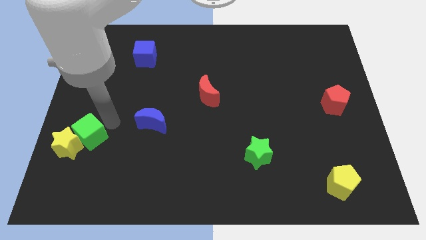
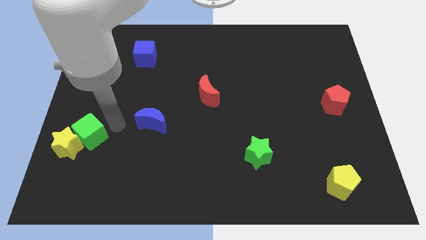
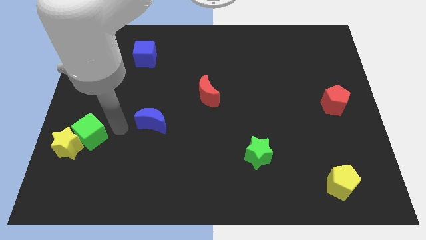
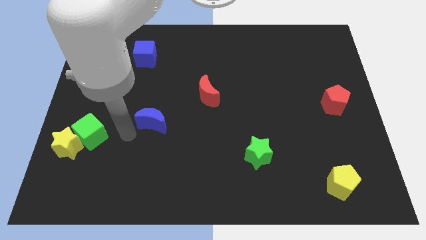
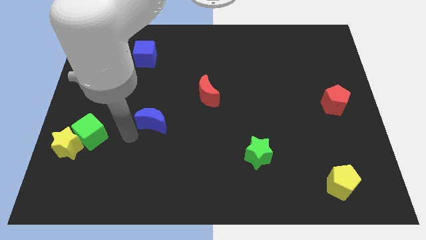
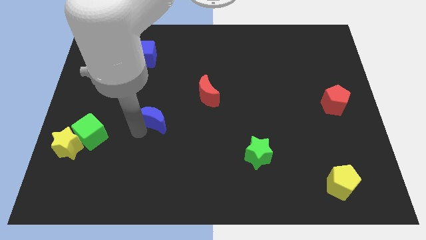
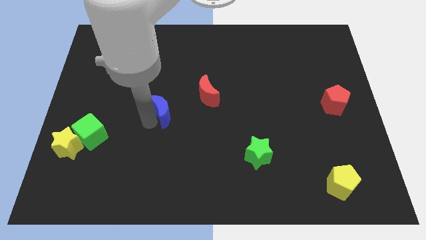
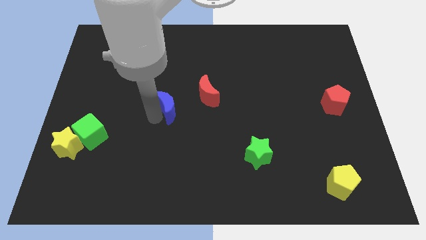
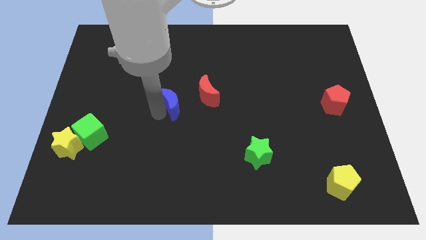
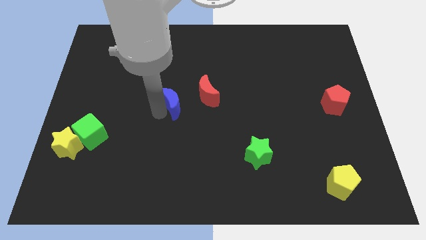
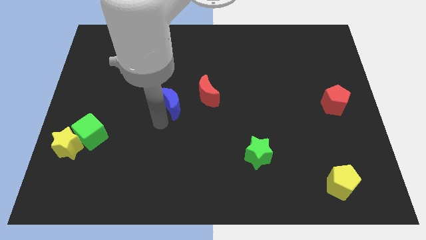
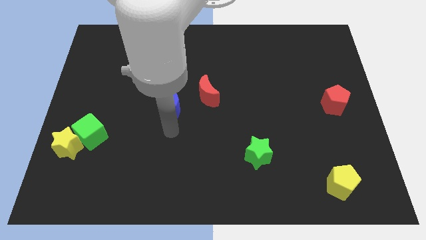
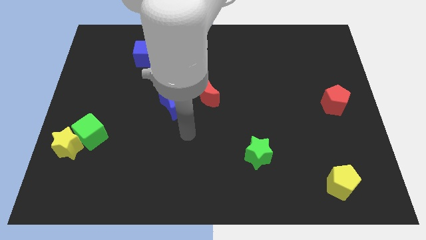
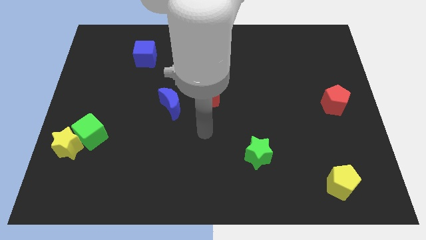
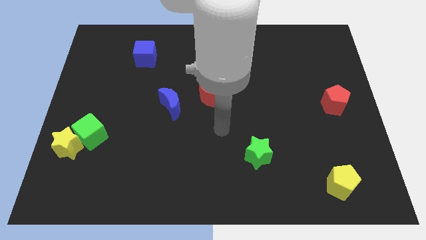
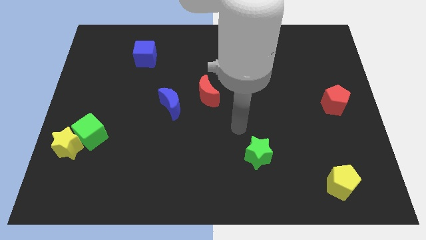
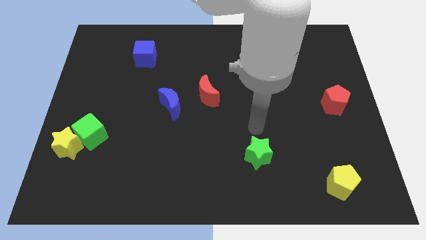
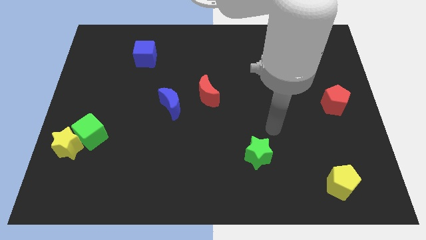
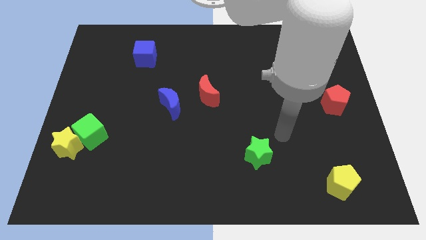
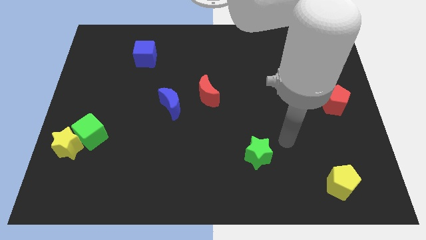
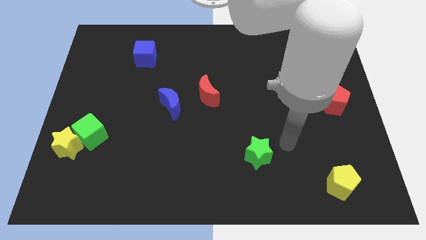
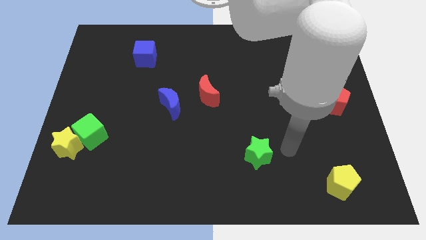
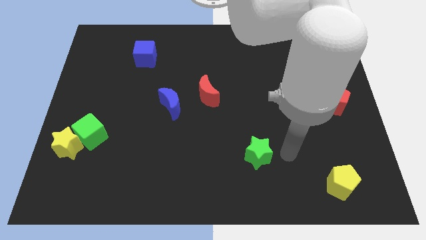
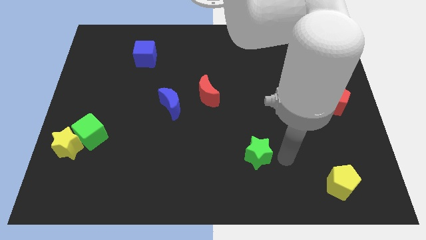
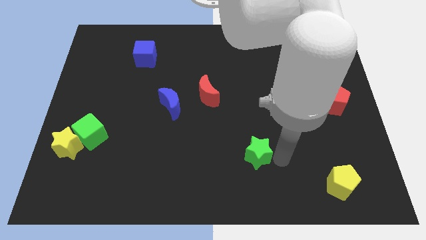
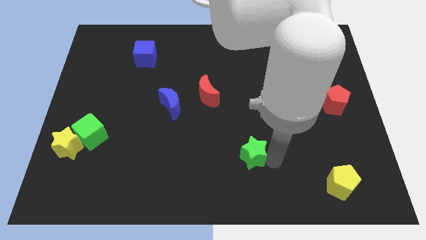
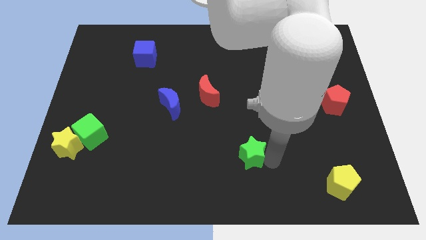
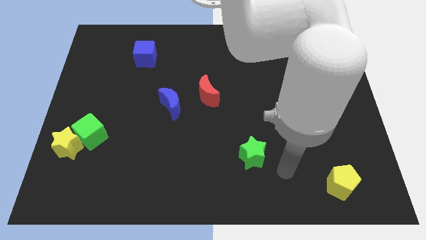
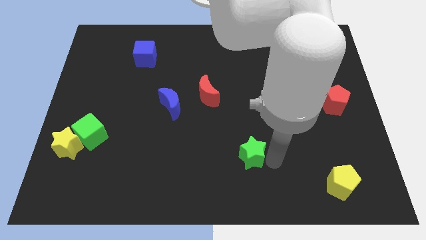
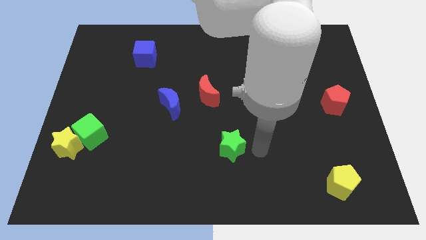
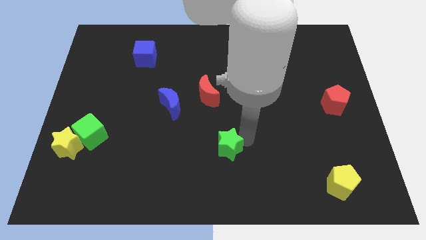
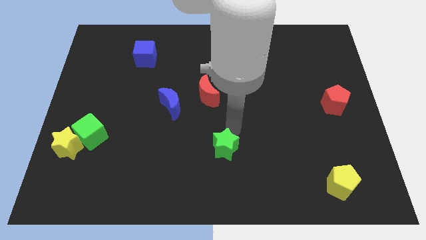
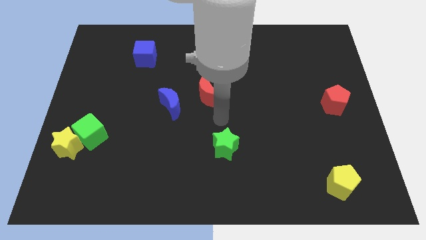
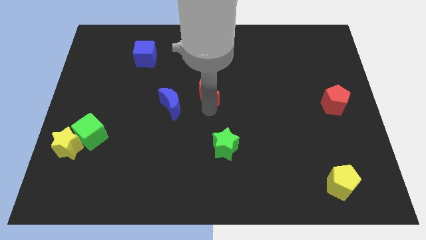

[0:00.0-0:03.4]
push the blue moon and green star towards the red moon

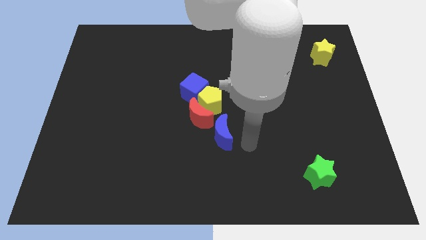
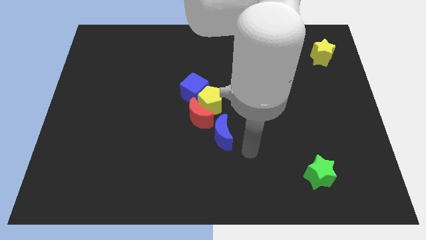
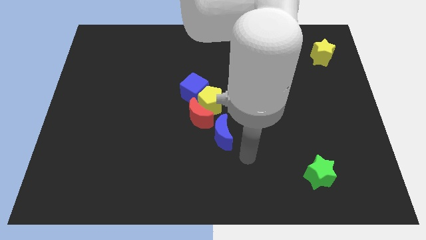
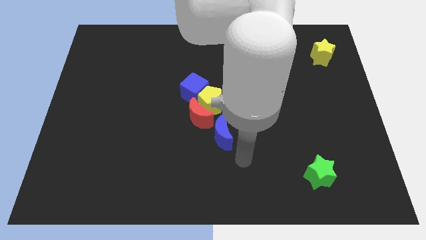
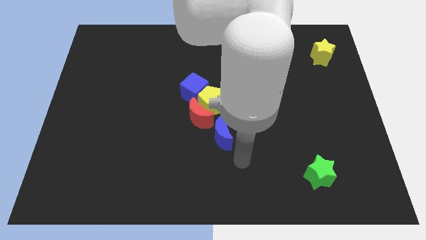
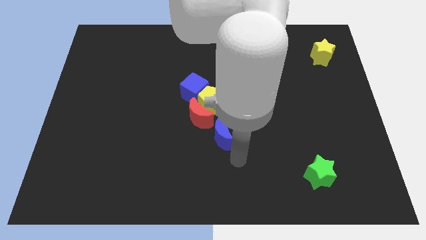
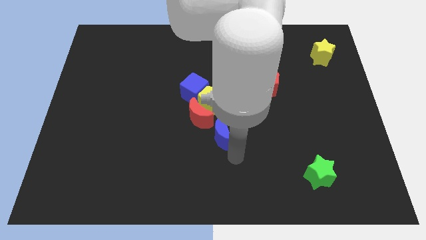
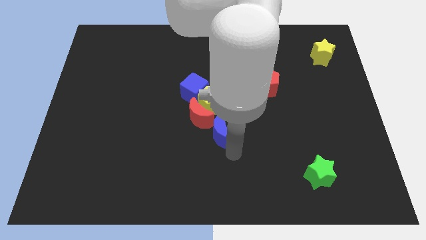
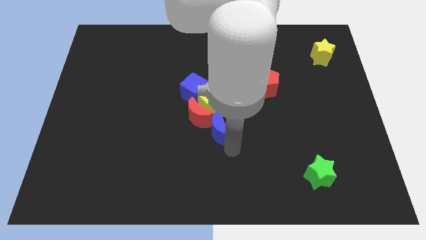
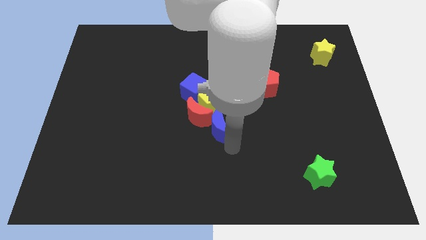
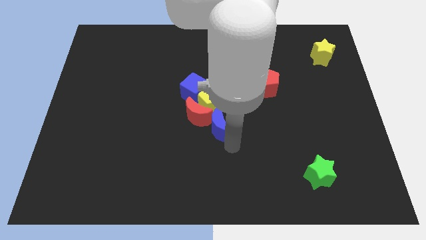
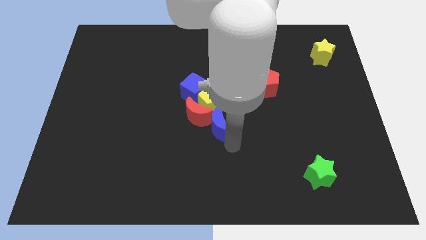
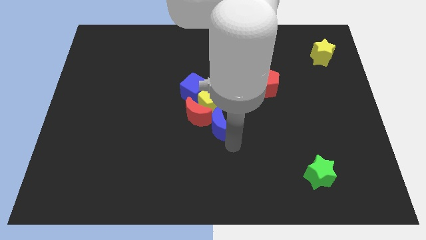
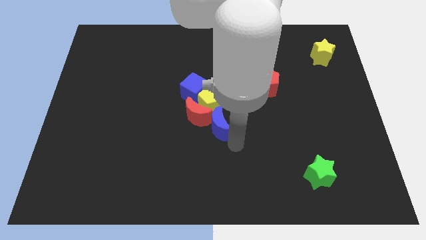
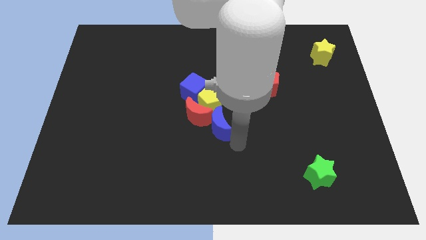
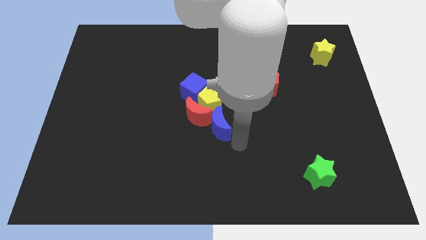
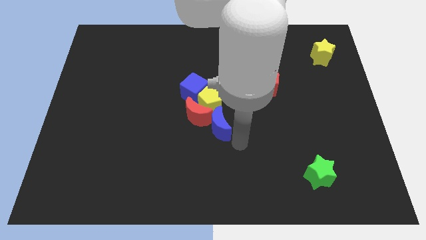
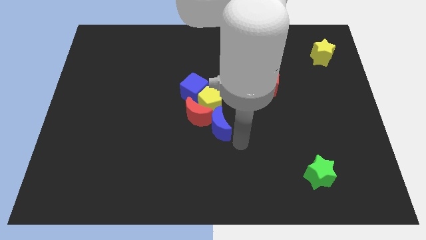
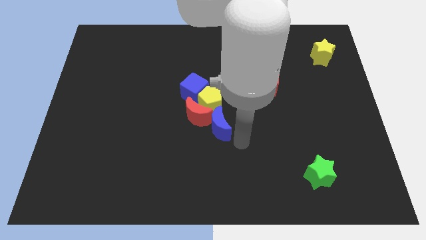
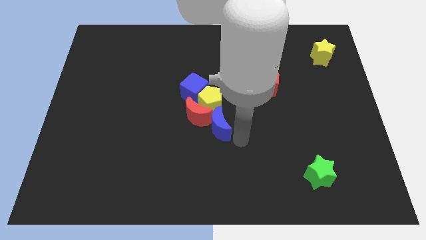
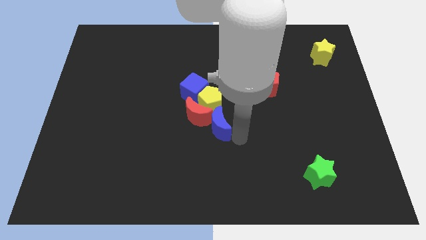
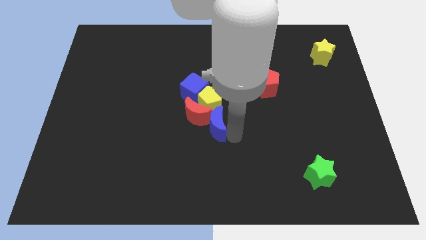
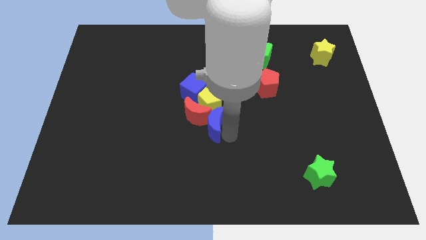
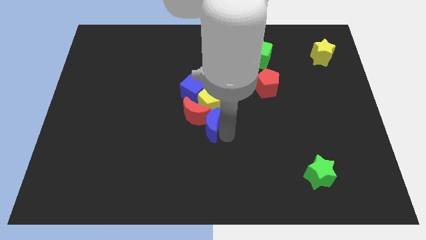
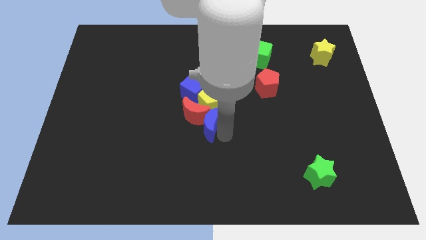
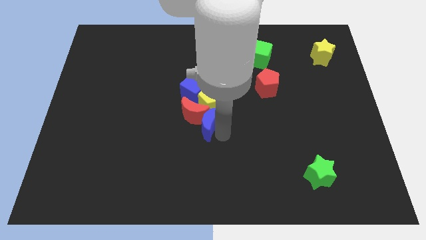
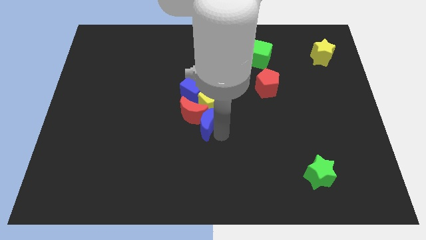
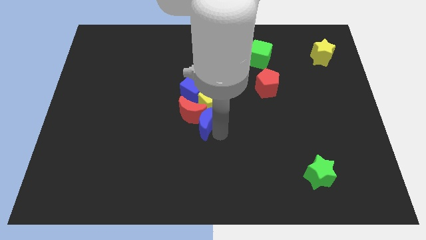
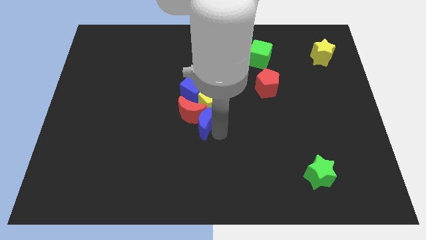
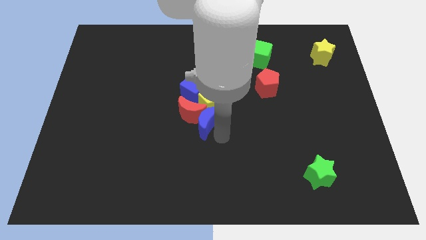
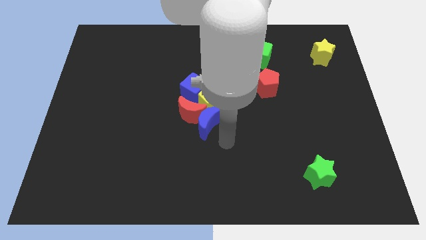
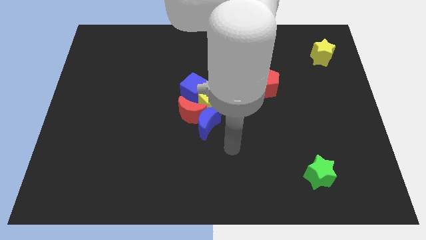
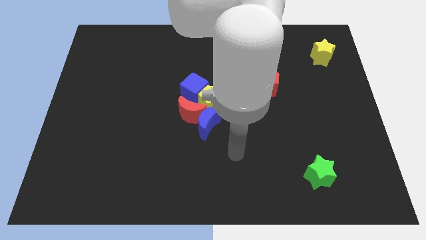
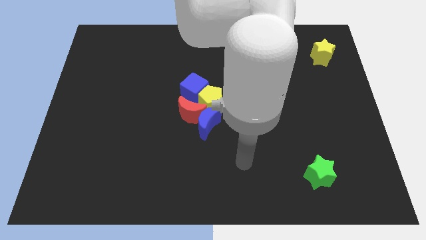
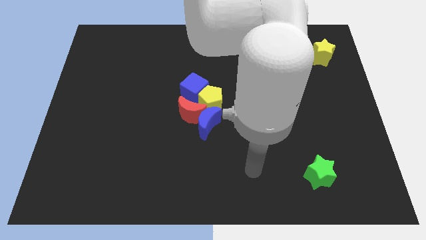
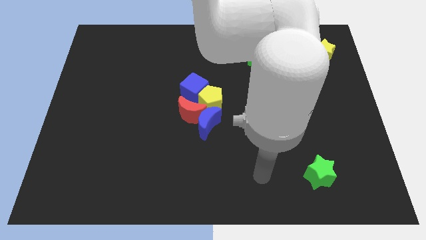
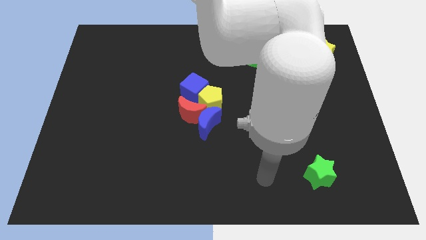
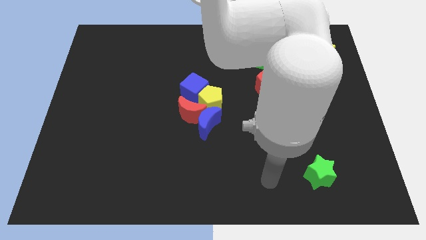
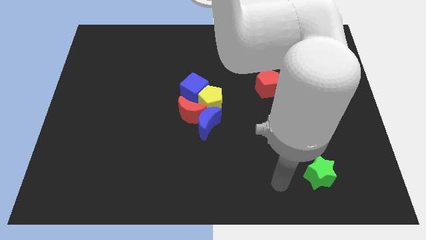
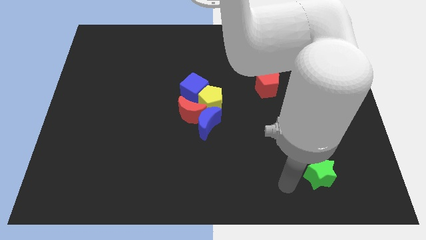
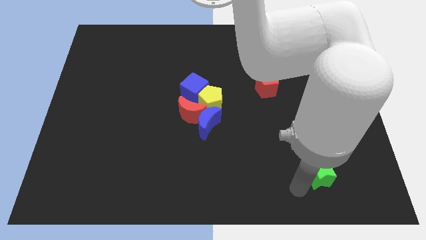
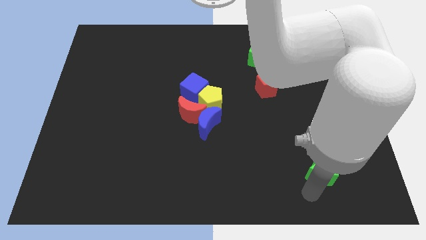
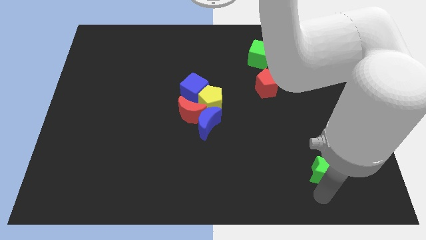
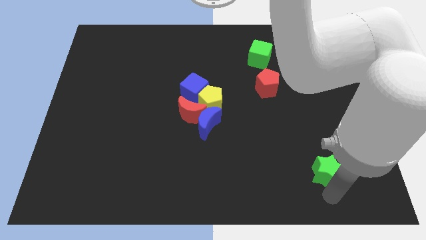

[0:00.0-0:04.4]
move the blue crescent into red moon

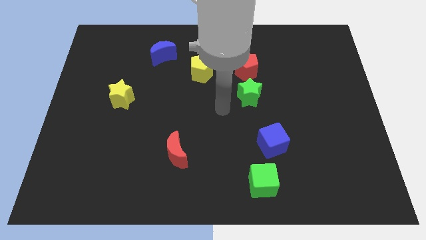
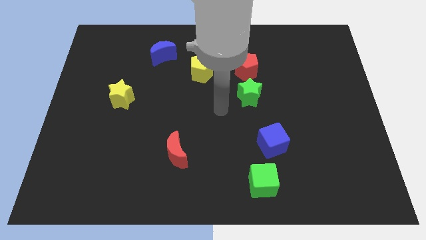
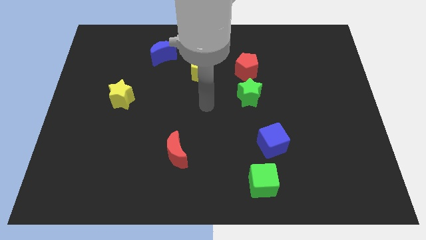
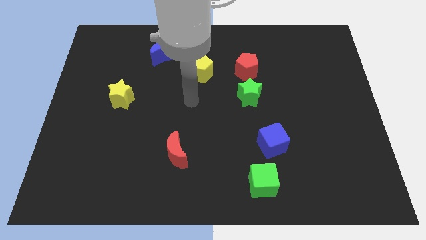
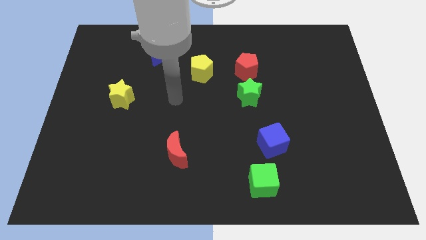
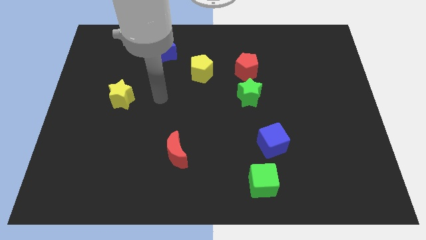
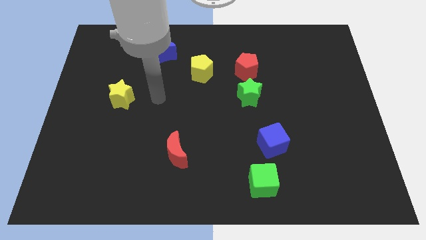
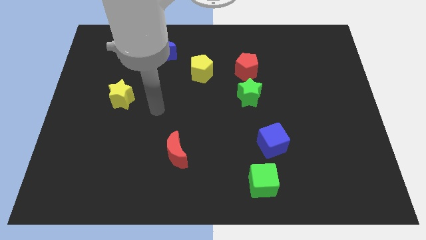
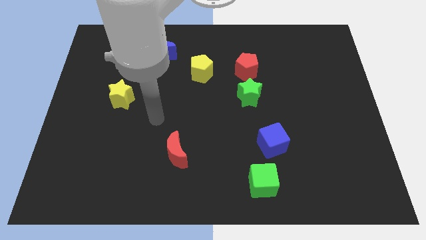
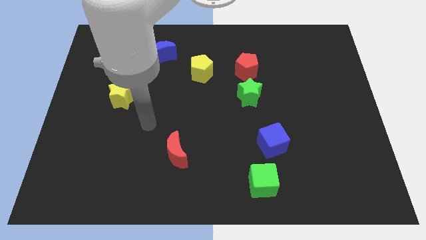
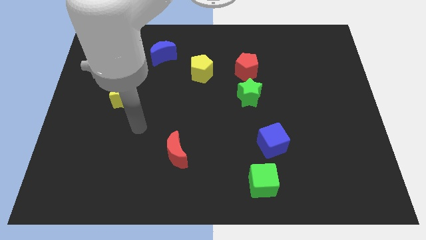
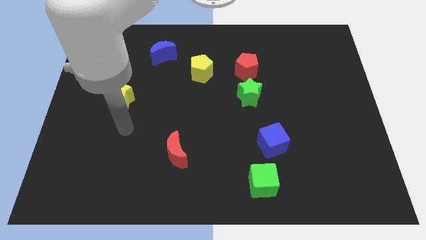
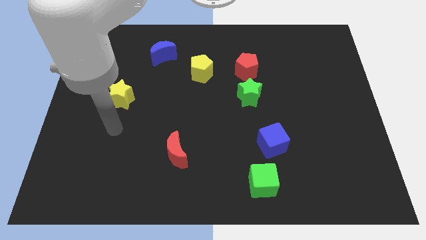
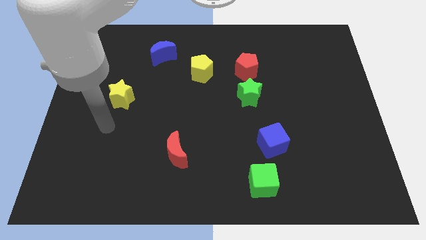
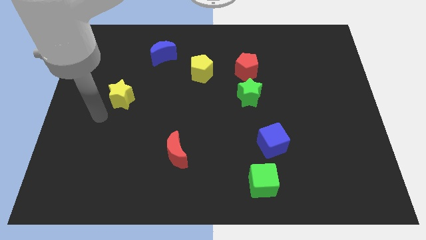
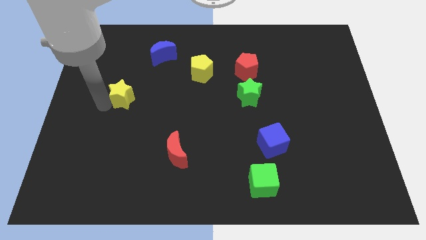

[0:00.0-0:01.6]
move your arm towards the yellow star
